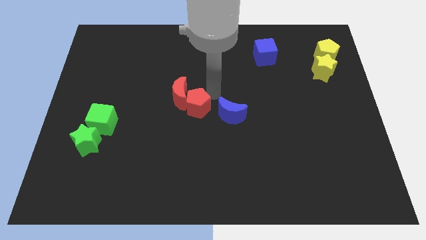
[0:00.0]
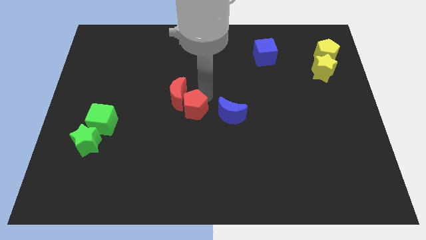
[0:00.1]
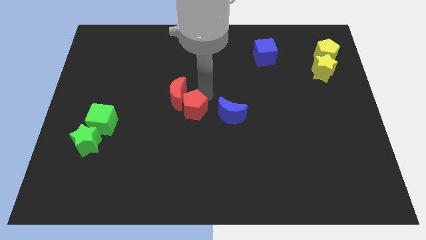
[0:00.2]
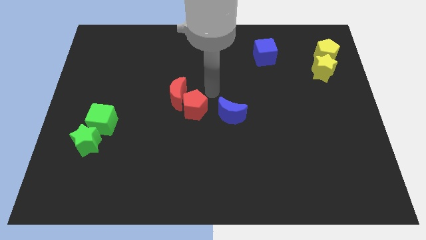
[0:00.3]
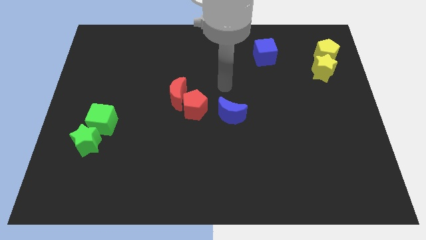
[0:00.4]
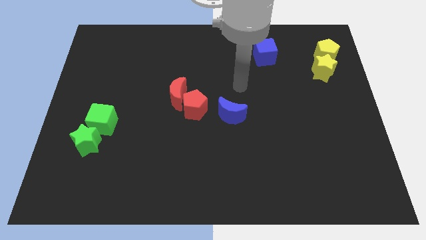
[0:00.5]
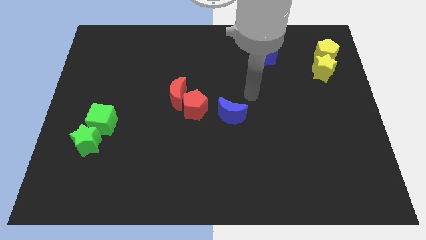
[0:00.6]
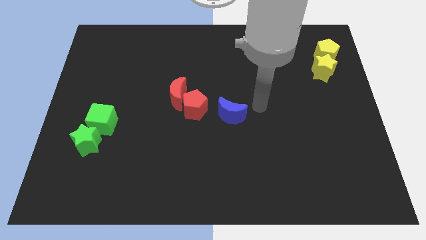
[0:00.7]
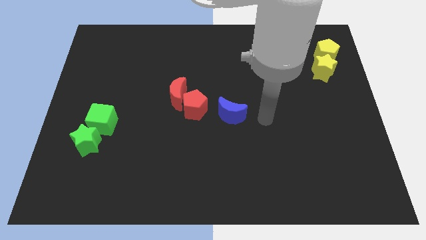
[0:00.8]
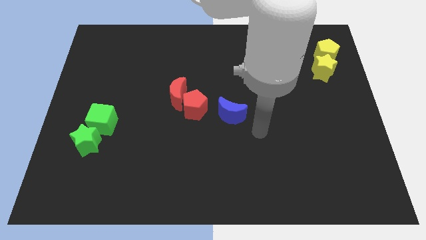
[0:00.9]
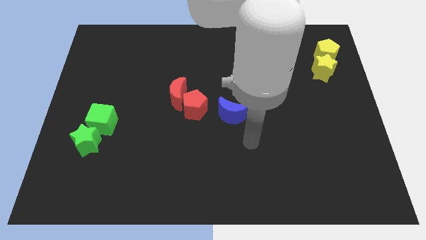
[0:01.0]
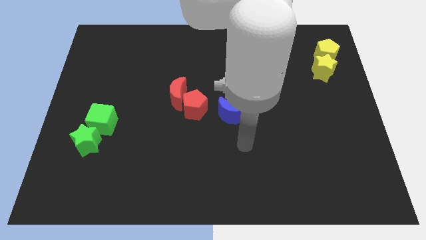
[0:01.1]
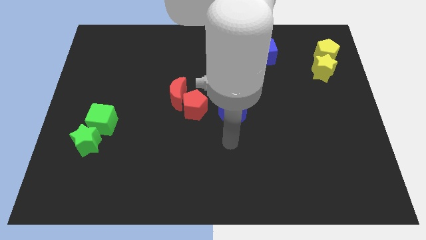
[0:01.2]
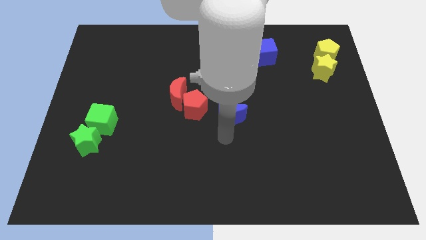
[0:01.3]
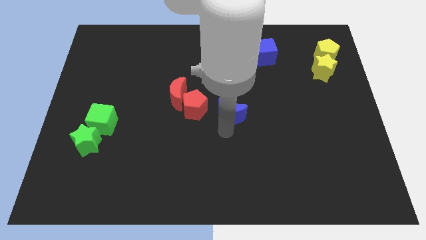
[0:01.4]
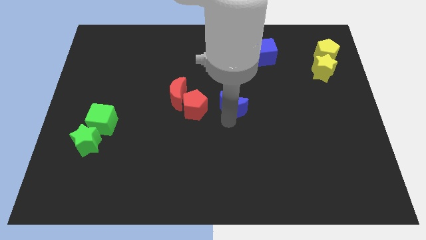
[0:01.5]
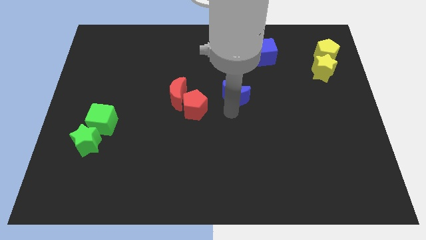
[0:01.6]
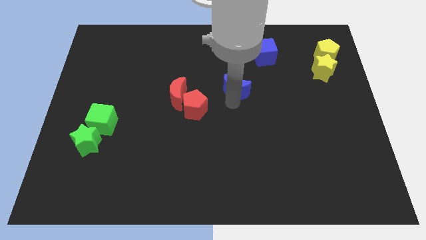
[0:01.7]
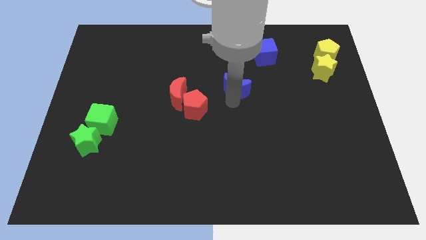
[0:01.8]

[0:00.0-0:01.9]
move the blue moon diagonally to the top right of the red pentagon

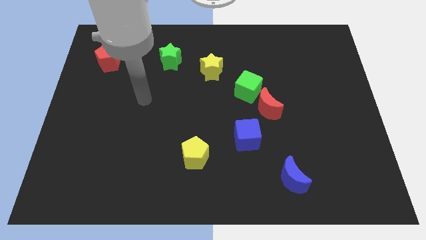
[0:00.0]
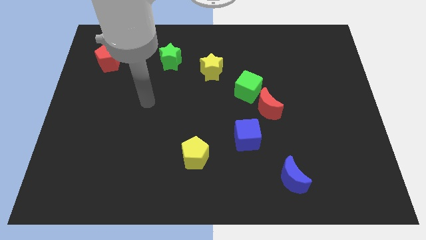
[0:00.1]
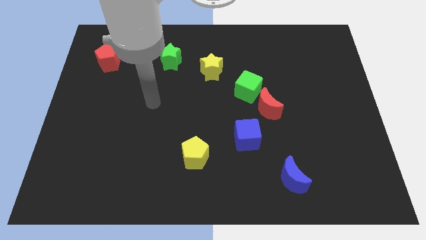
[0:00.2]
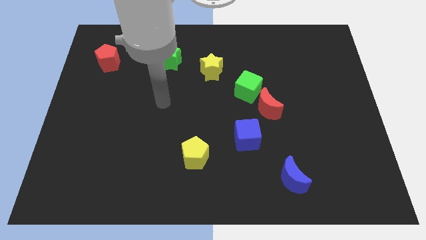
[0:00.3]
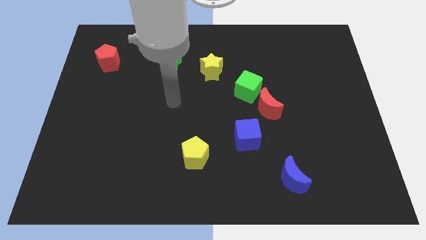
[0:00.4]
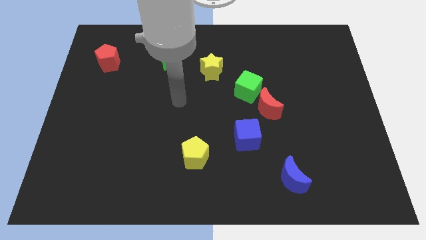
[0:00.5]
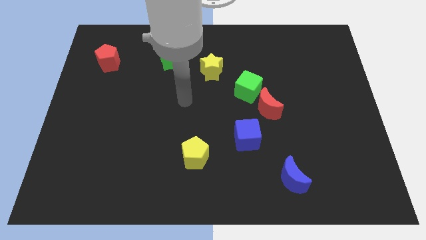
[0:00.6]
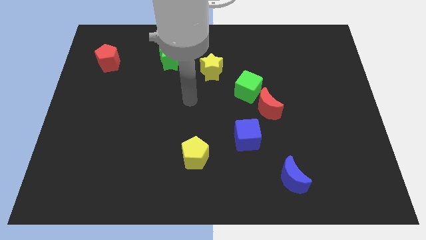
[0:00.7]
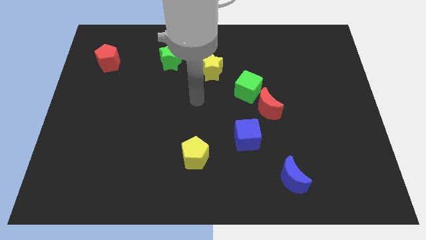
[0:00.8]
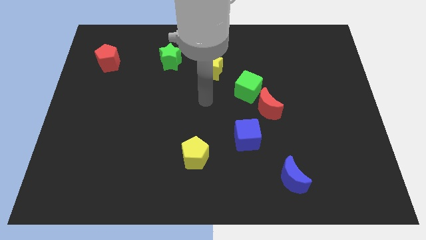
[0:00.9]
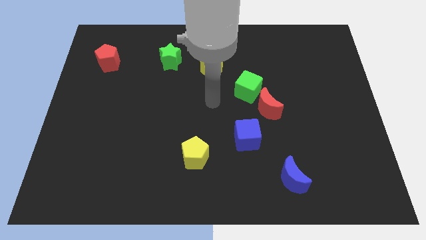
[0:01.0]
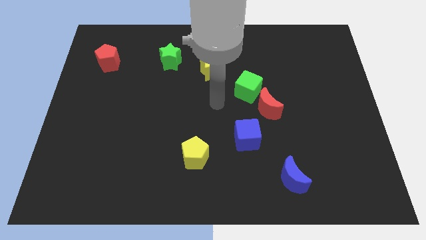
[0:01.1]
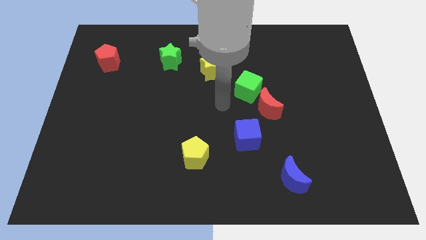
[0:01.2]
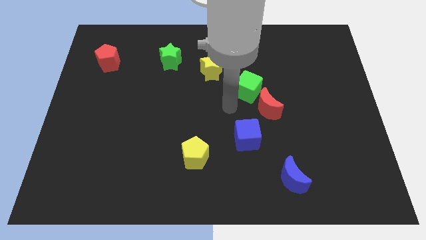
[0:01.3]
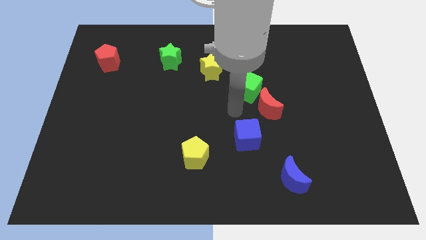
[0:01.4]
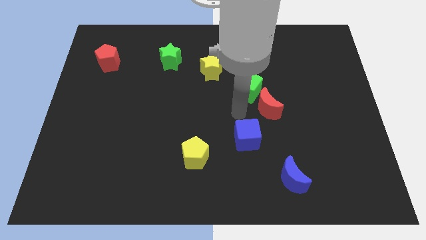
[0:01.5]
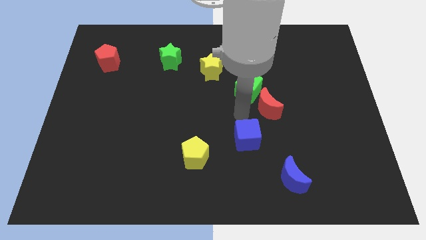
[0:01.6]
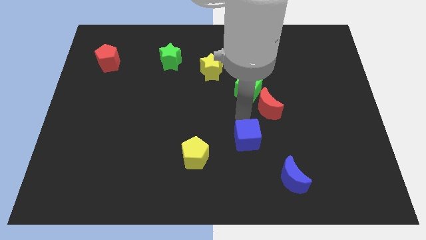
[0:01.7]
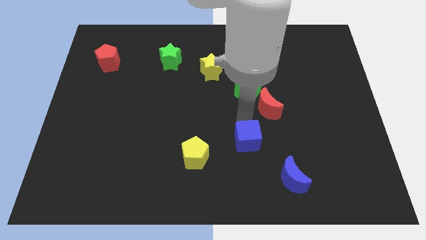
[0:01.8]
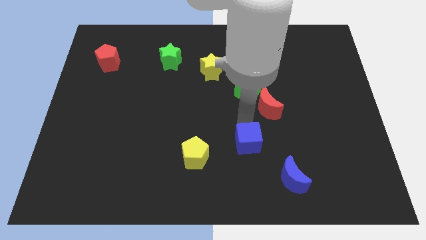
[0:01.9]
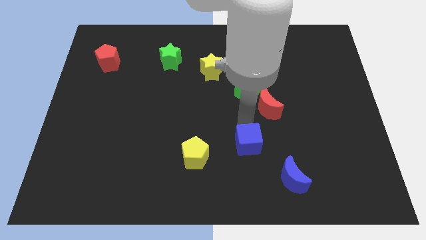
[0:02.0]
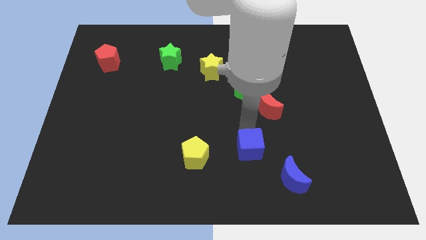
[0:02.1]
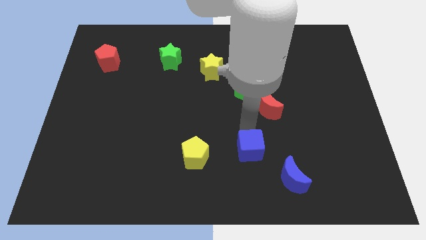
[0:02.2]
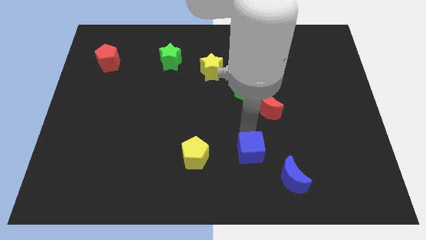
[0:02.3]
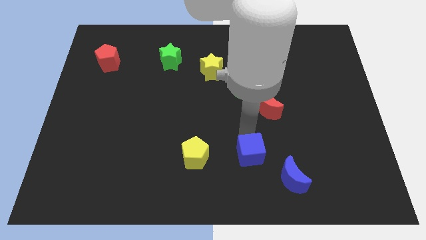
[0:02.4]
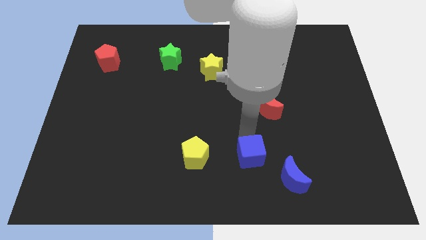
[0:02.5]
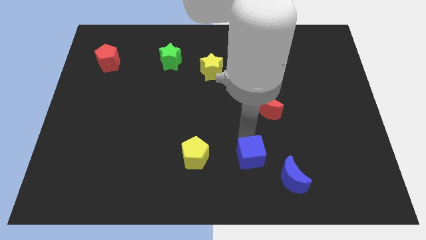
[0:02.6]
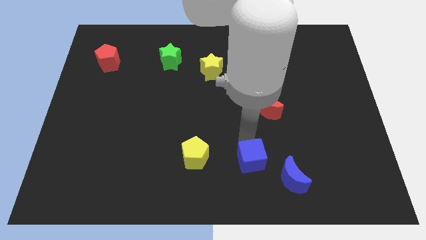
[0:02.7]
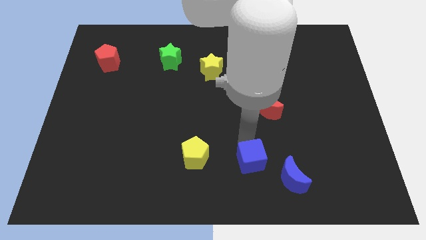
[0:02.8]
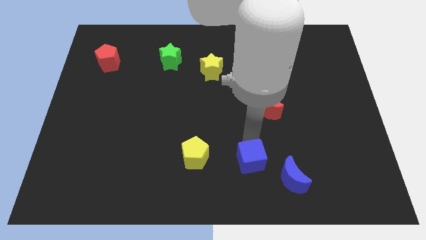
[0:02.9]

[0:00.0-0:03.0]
push the blue cube slightly towards the top side of the blue moon

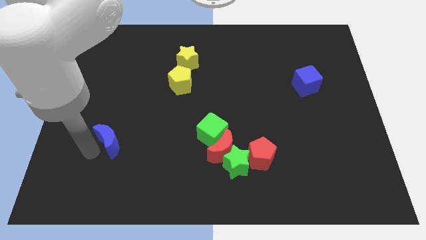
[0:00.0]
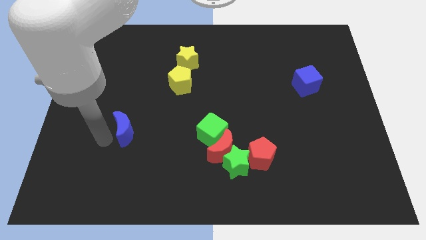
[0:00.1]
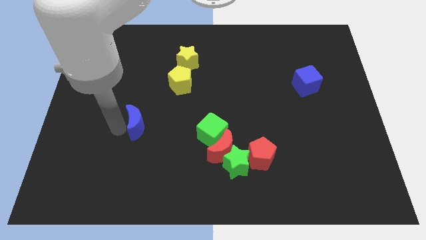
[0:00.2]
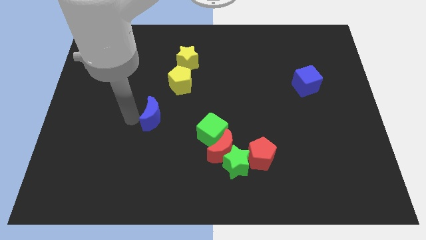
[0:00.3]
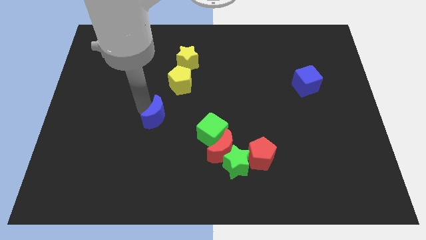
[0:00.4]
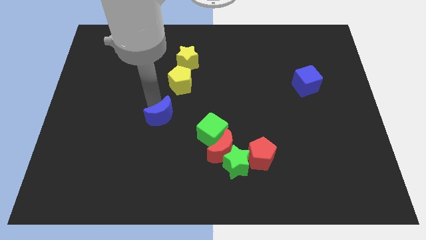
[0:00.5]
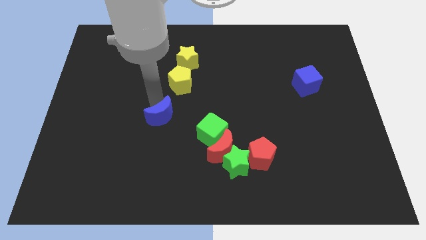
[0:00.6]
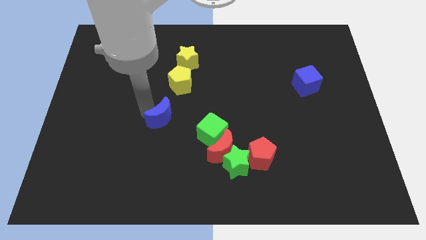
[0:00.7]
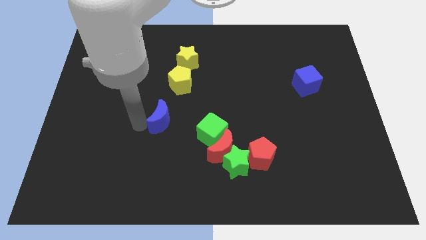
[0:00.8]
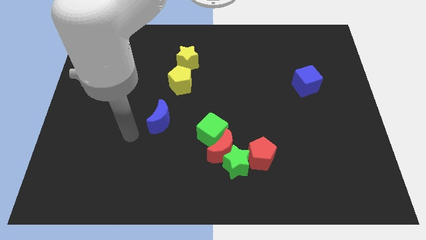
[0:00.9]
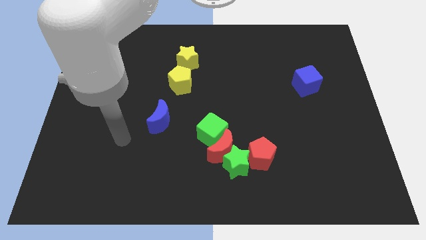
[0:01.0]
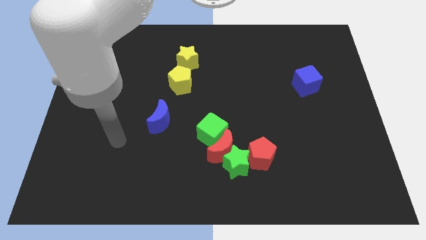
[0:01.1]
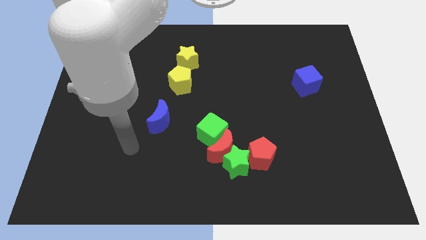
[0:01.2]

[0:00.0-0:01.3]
move blue crescent close to bottom of yellow pentagon

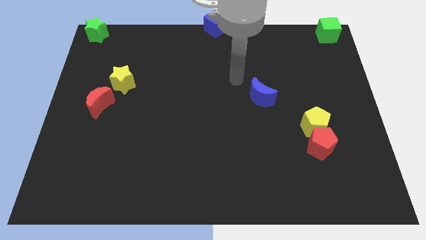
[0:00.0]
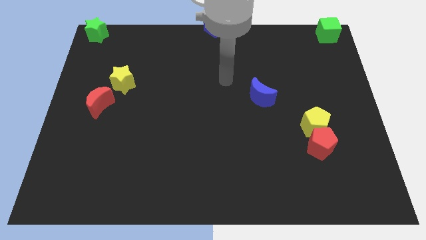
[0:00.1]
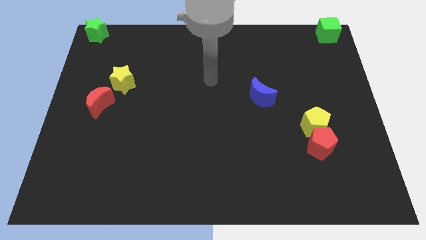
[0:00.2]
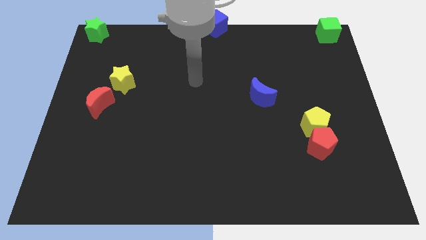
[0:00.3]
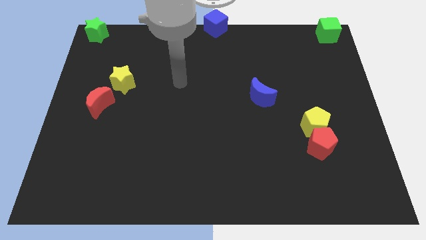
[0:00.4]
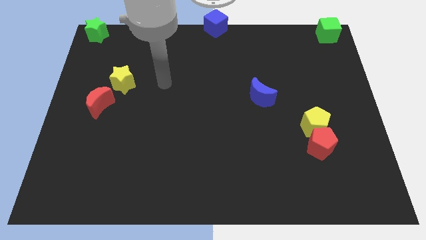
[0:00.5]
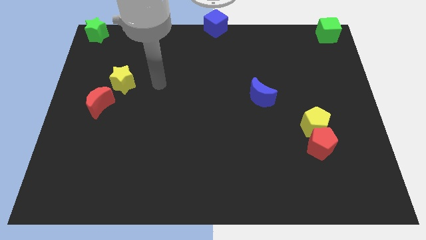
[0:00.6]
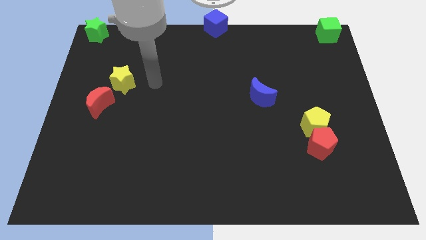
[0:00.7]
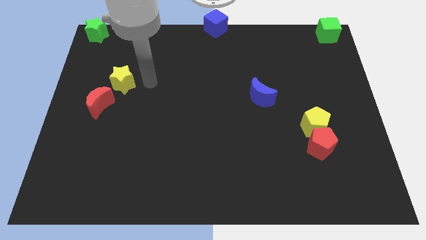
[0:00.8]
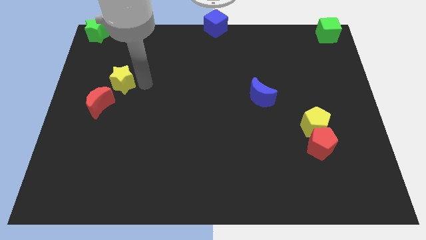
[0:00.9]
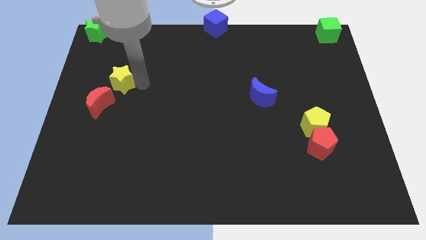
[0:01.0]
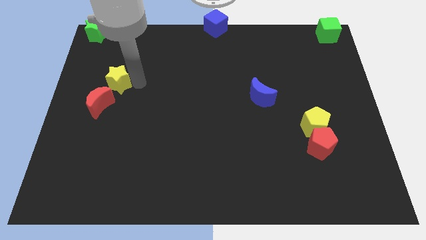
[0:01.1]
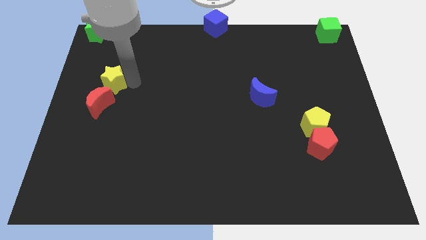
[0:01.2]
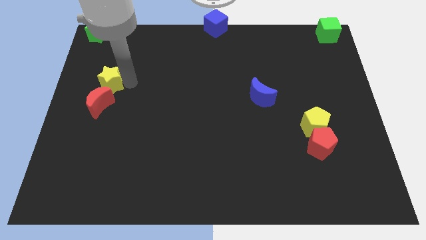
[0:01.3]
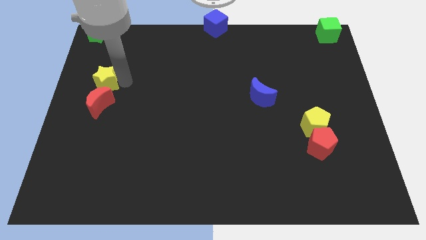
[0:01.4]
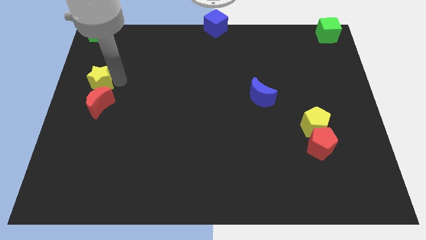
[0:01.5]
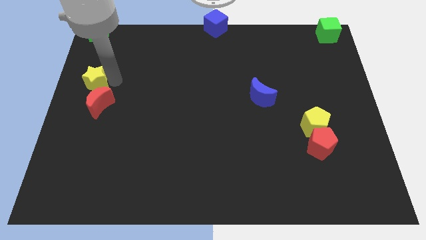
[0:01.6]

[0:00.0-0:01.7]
place the yellow star above the red moon

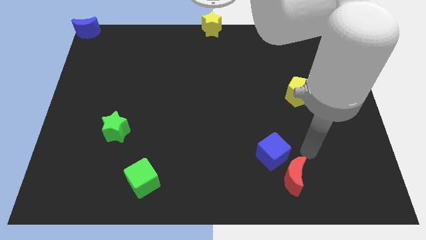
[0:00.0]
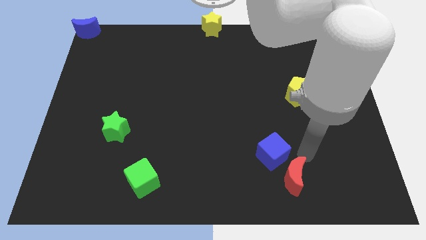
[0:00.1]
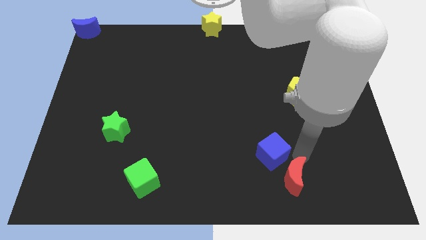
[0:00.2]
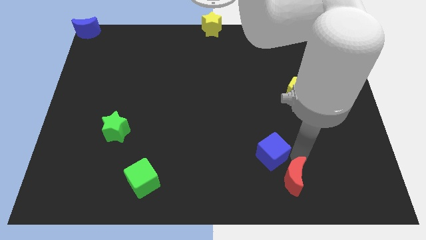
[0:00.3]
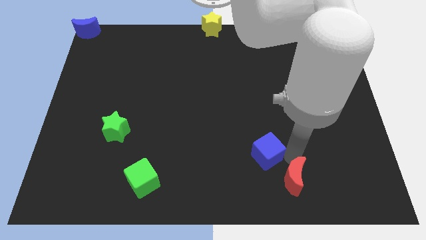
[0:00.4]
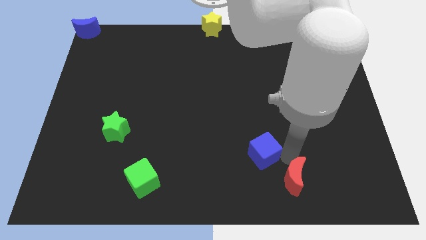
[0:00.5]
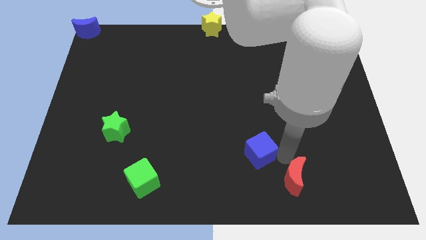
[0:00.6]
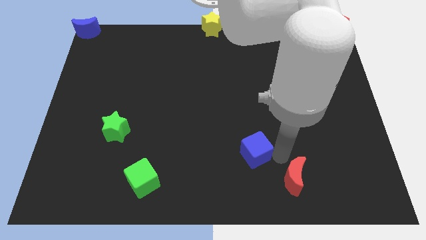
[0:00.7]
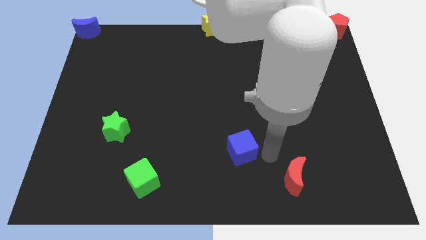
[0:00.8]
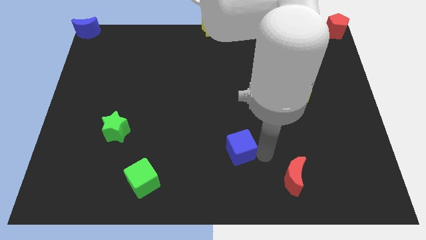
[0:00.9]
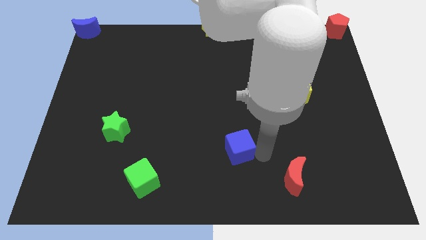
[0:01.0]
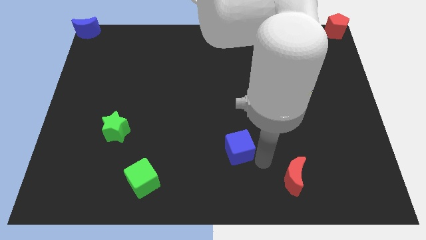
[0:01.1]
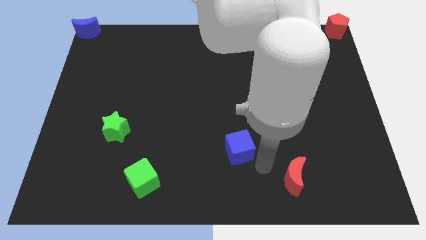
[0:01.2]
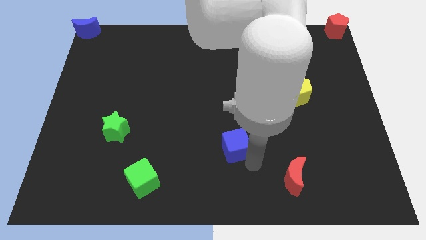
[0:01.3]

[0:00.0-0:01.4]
move the blue cube to the left side
